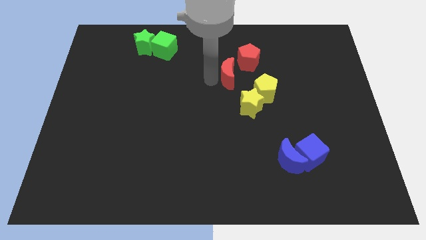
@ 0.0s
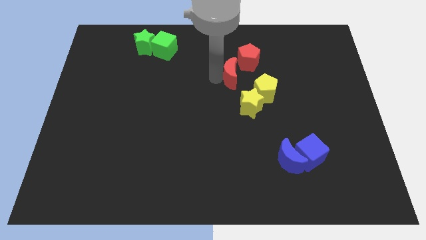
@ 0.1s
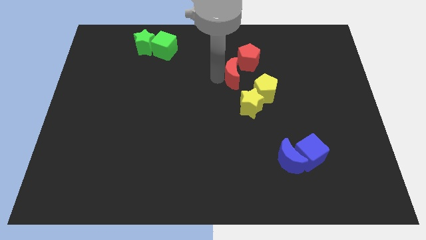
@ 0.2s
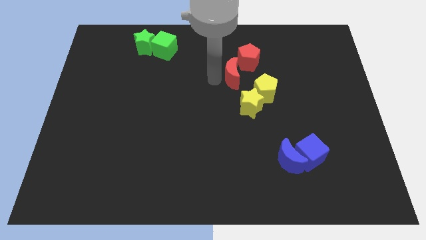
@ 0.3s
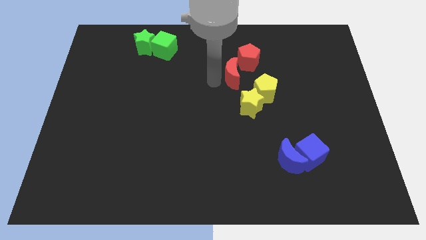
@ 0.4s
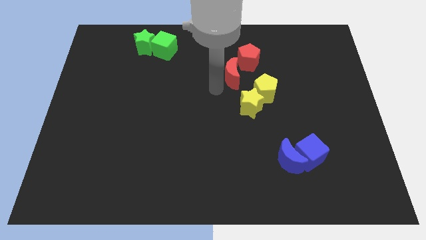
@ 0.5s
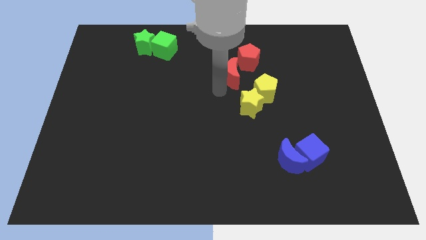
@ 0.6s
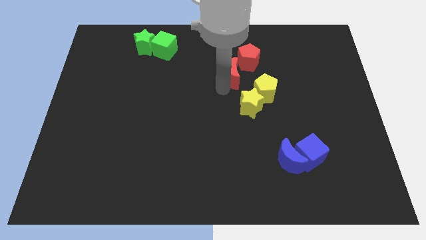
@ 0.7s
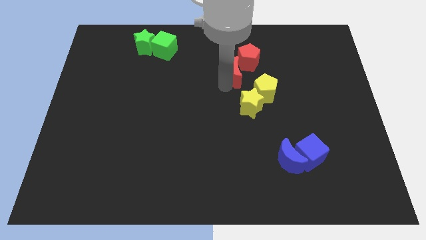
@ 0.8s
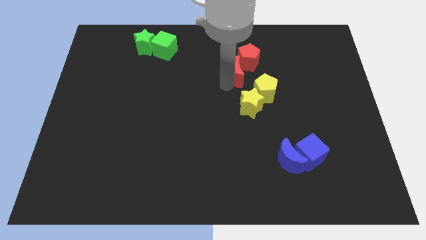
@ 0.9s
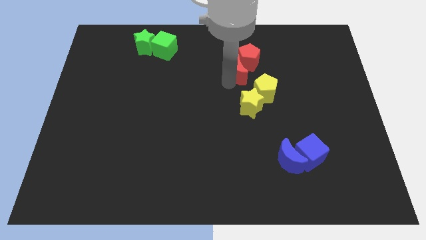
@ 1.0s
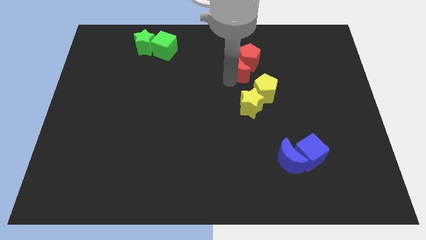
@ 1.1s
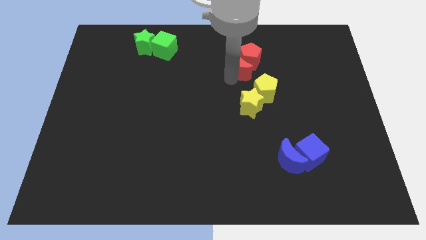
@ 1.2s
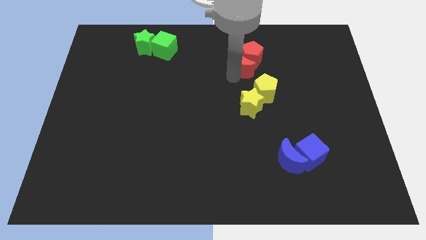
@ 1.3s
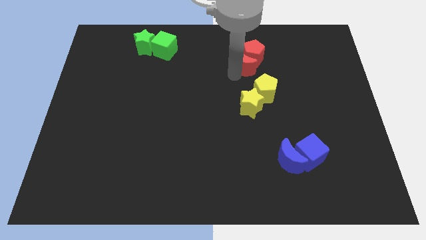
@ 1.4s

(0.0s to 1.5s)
push the red crescent into the red pentagon

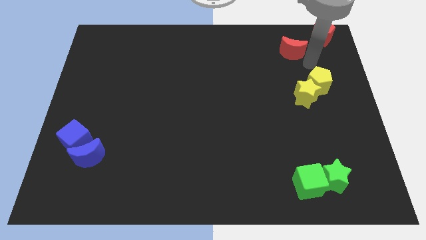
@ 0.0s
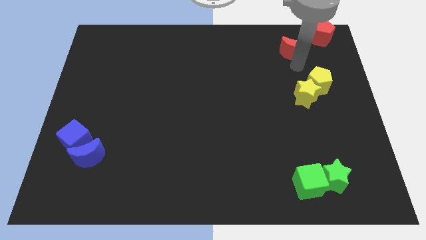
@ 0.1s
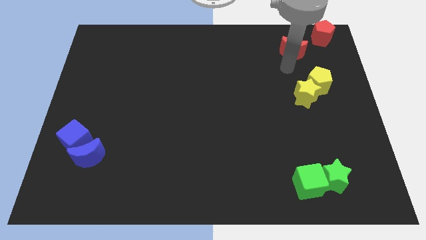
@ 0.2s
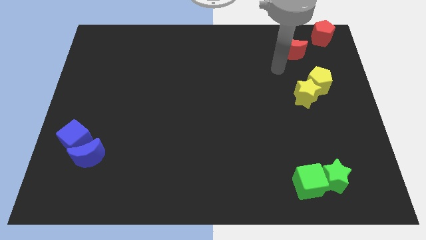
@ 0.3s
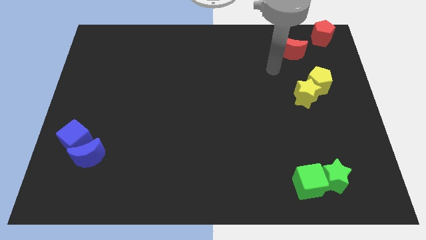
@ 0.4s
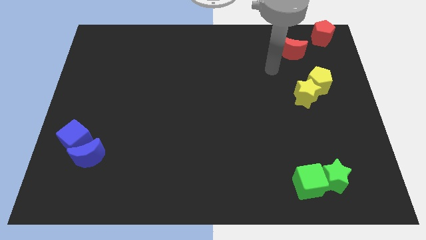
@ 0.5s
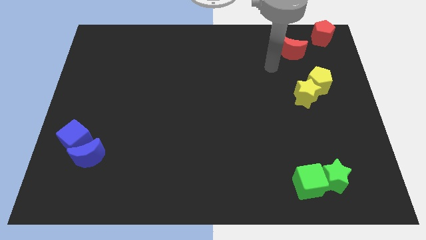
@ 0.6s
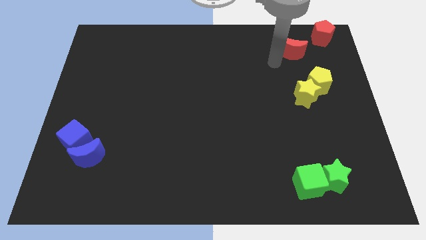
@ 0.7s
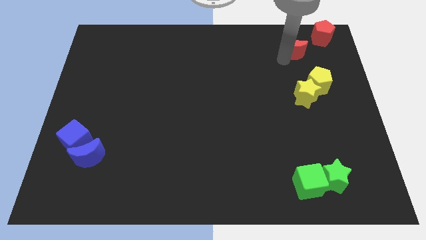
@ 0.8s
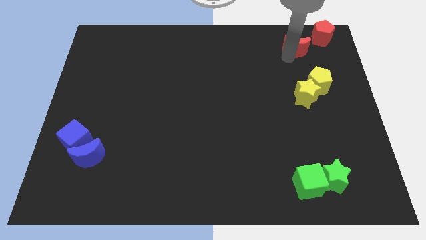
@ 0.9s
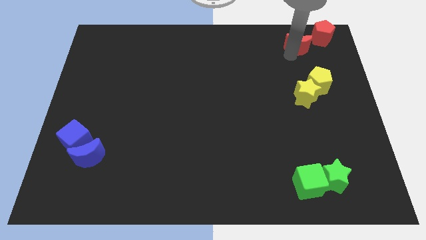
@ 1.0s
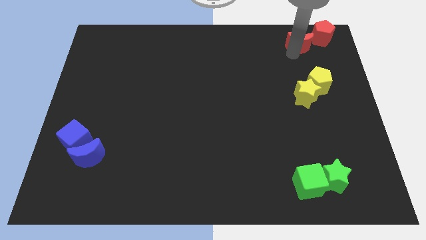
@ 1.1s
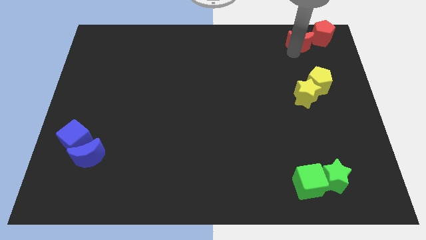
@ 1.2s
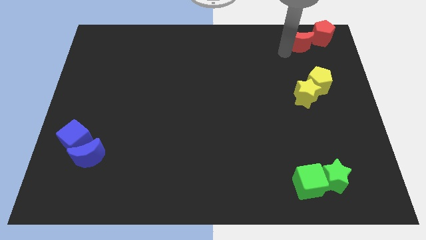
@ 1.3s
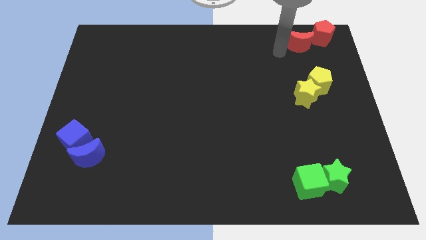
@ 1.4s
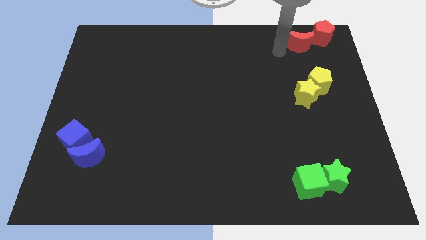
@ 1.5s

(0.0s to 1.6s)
push the red moon beside the red pentagon

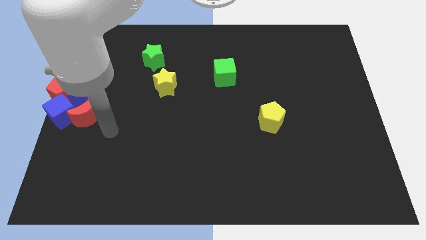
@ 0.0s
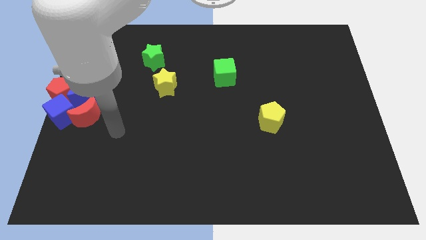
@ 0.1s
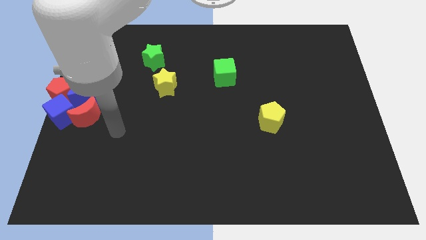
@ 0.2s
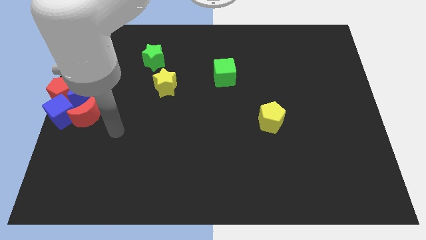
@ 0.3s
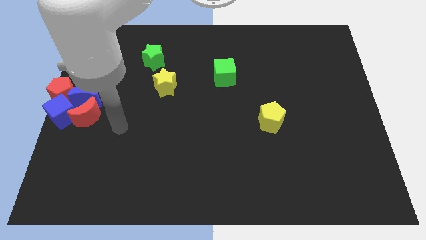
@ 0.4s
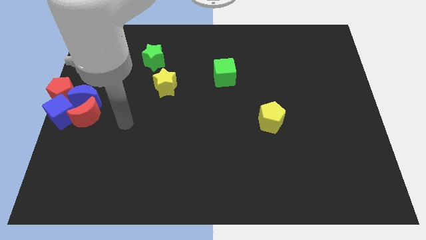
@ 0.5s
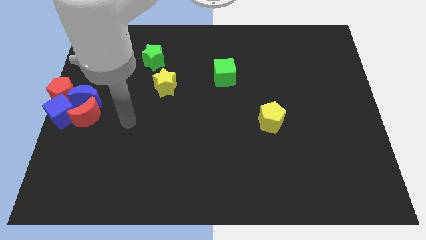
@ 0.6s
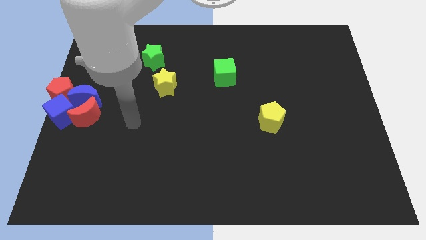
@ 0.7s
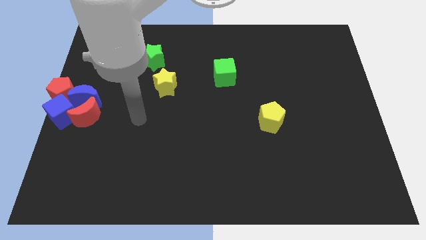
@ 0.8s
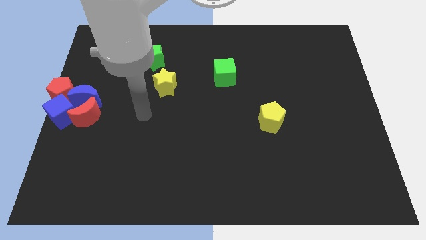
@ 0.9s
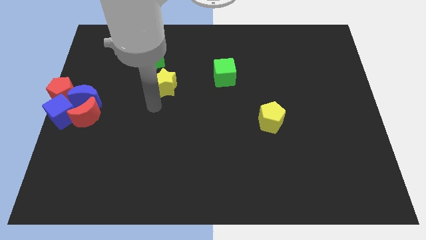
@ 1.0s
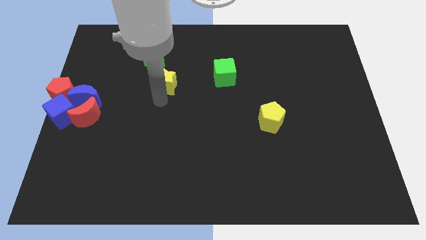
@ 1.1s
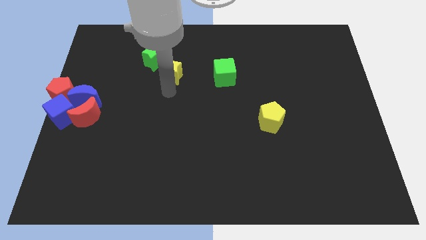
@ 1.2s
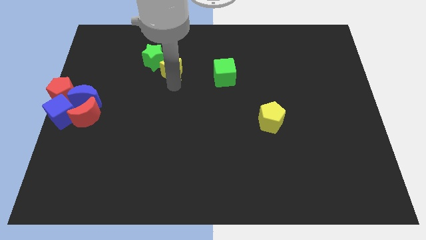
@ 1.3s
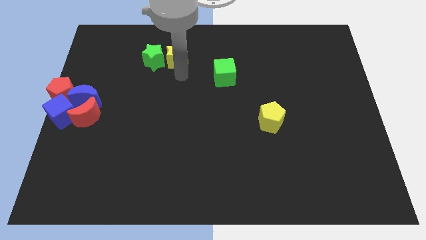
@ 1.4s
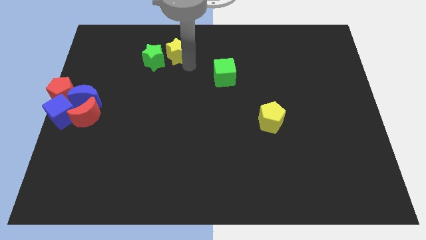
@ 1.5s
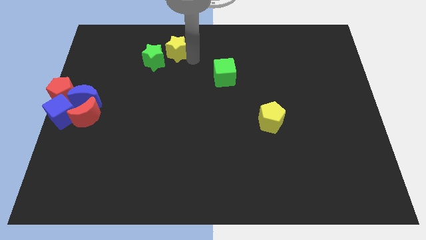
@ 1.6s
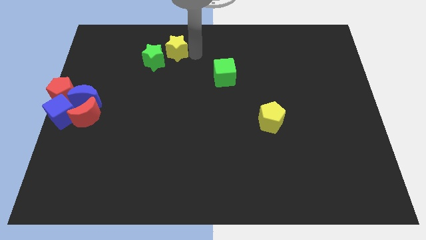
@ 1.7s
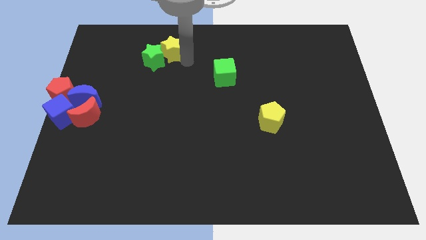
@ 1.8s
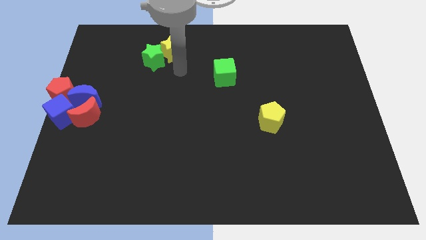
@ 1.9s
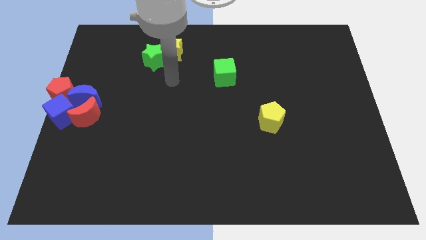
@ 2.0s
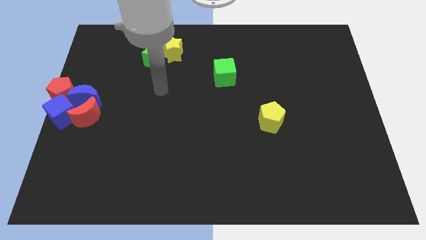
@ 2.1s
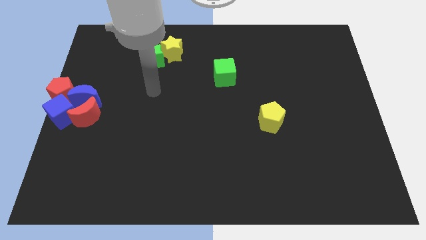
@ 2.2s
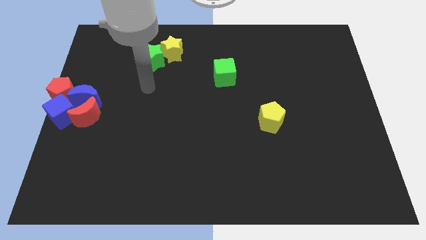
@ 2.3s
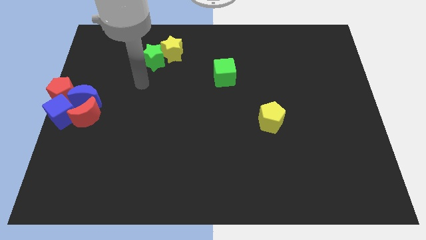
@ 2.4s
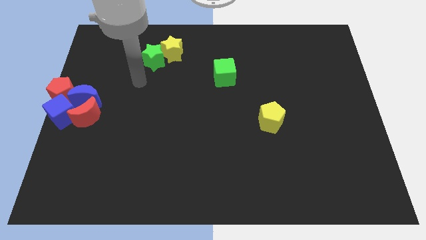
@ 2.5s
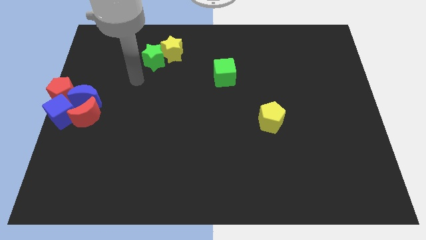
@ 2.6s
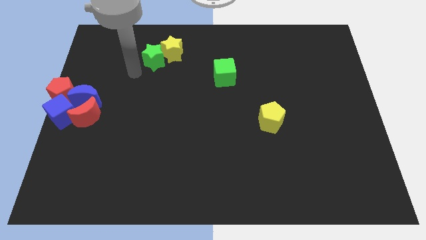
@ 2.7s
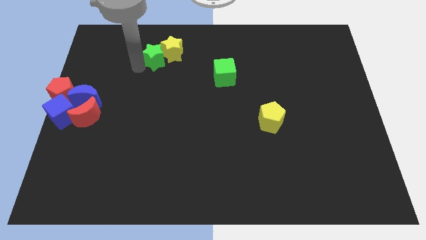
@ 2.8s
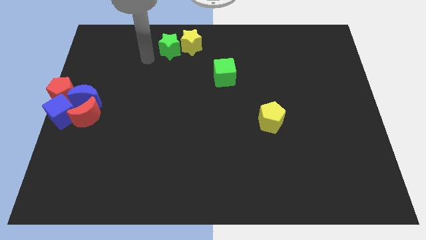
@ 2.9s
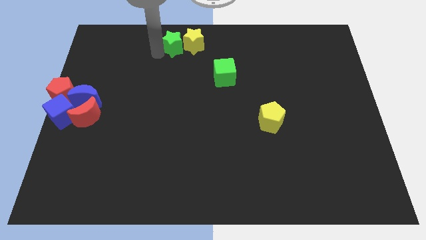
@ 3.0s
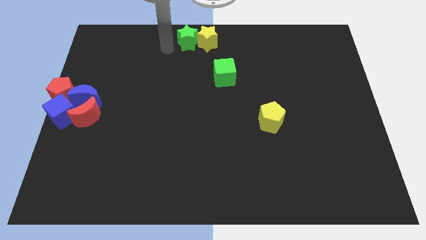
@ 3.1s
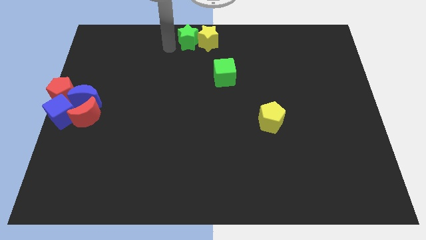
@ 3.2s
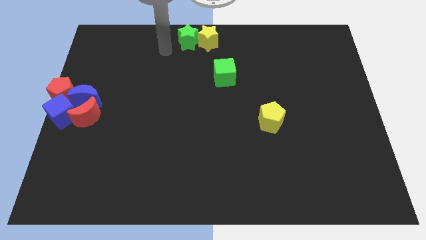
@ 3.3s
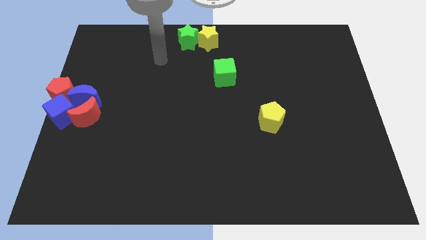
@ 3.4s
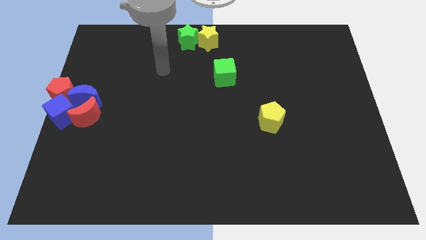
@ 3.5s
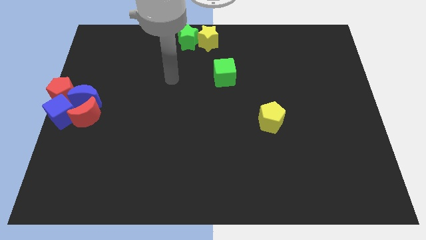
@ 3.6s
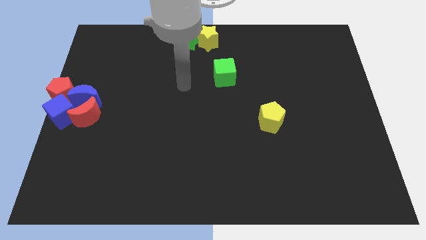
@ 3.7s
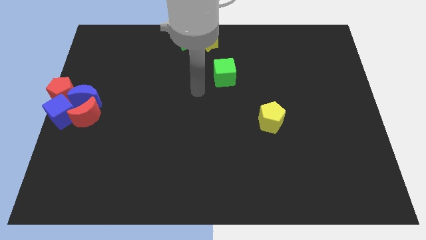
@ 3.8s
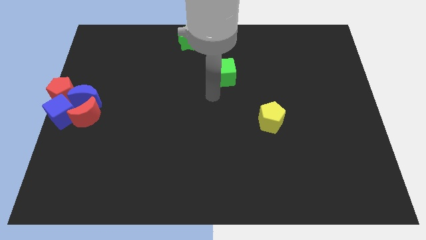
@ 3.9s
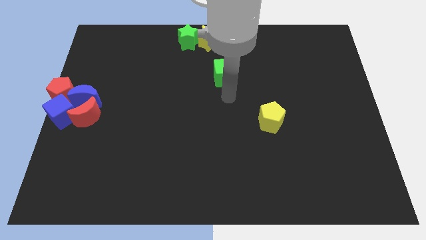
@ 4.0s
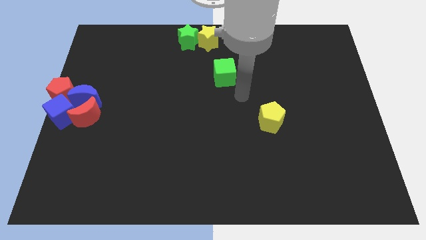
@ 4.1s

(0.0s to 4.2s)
push the yellow and green star to the top center of the board

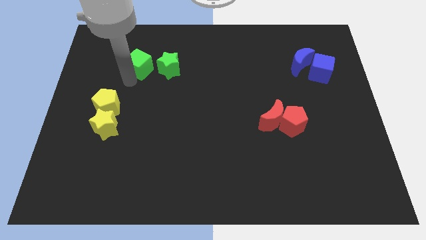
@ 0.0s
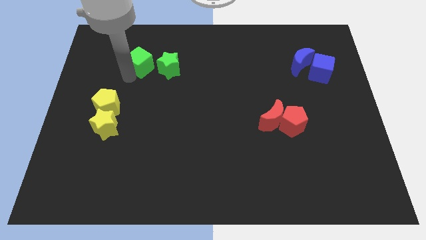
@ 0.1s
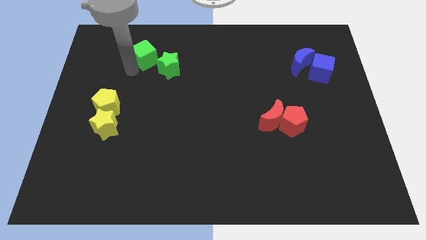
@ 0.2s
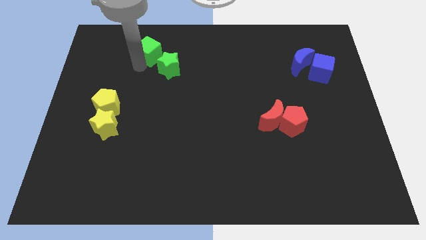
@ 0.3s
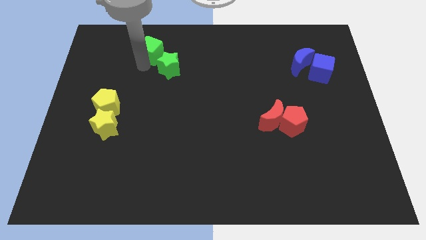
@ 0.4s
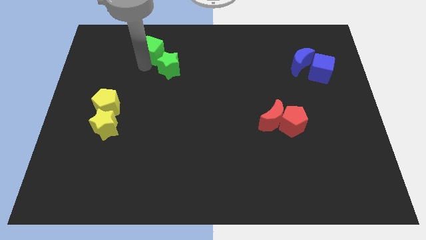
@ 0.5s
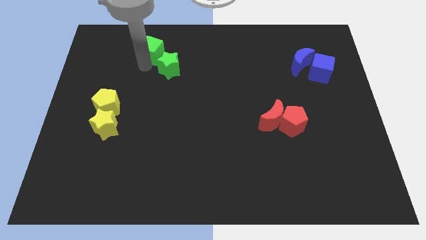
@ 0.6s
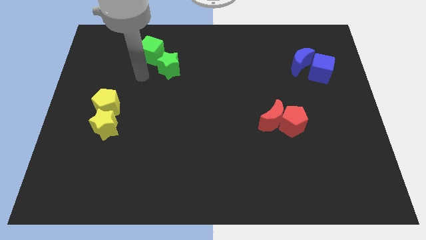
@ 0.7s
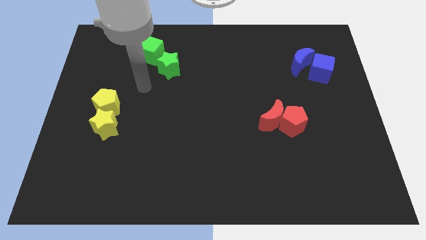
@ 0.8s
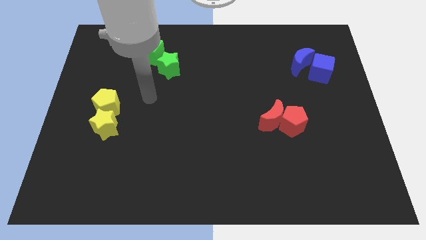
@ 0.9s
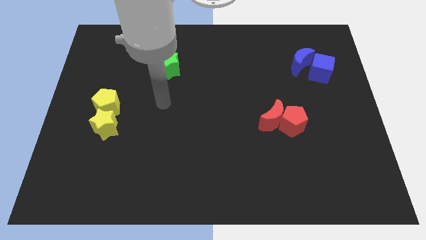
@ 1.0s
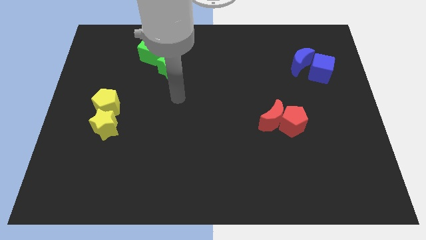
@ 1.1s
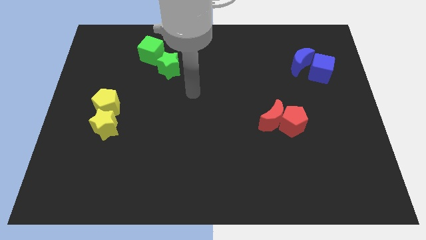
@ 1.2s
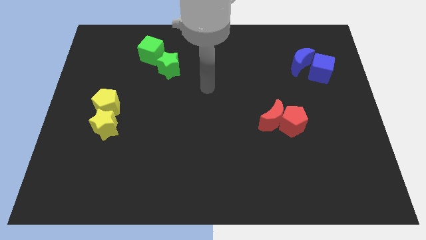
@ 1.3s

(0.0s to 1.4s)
move the green cube slightly to the top of green star

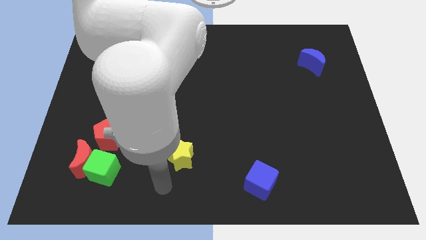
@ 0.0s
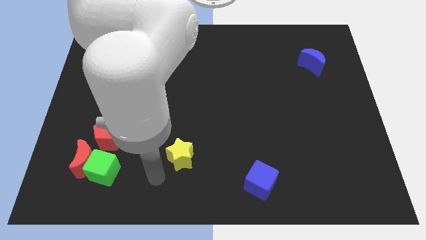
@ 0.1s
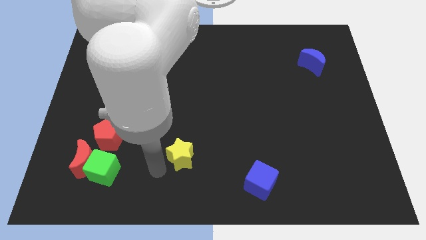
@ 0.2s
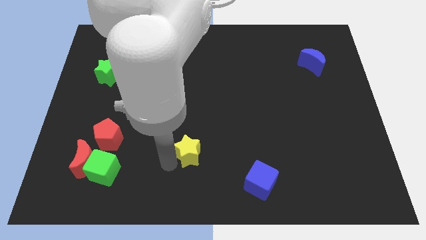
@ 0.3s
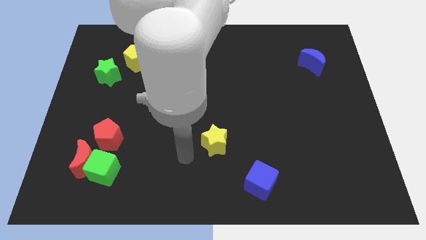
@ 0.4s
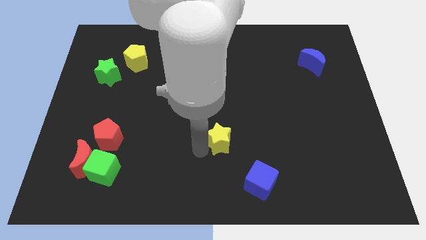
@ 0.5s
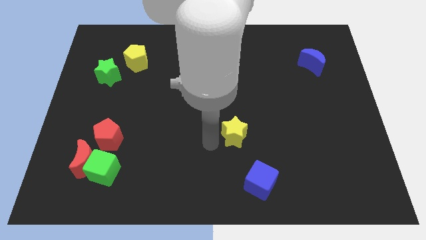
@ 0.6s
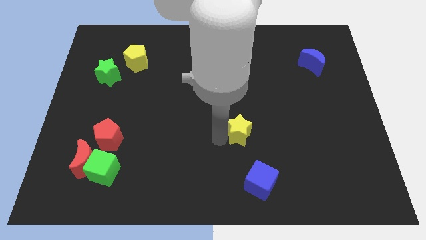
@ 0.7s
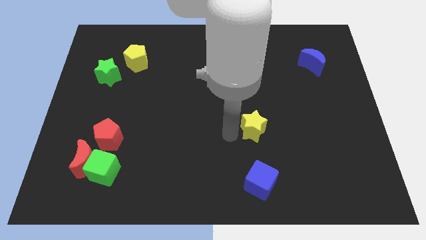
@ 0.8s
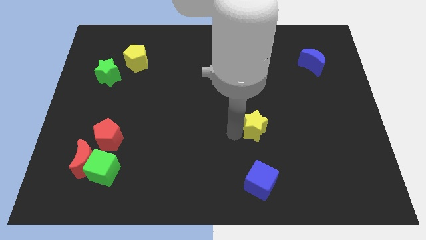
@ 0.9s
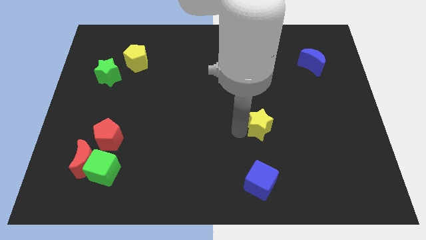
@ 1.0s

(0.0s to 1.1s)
slide the yellow star above the blue cube
